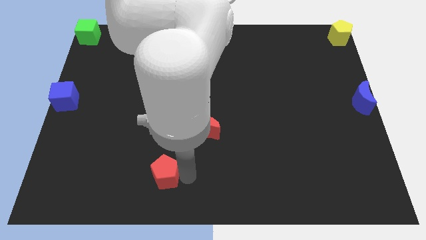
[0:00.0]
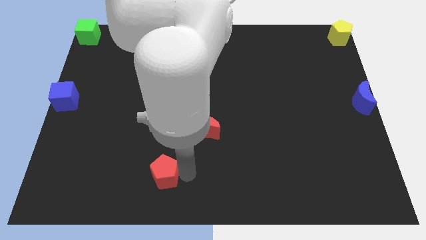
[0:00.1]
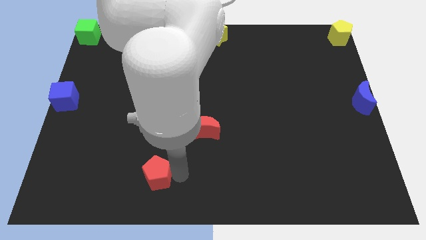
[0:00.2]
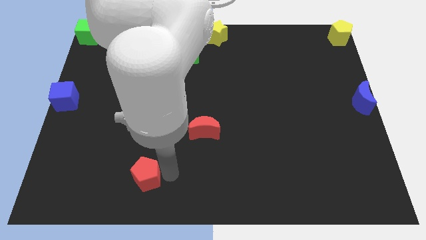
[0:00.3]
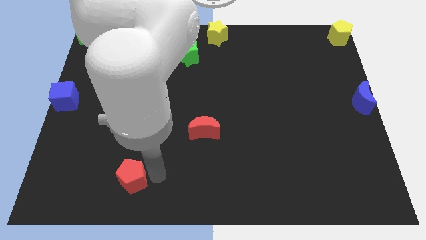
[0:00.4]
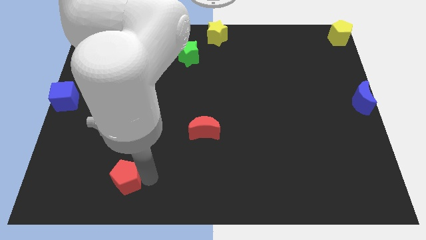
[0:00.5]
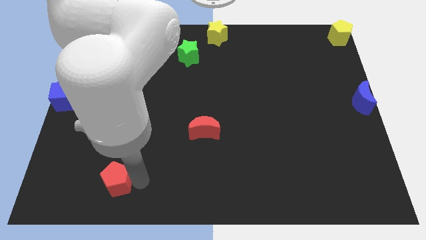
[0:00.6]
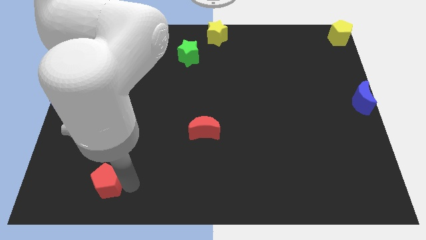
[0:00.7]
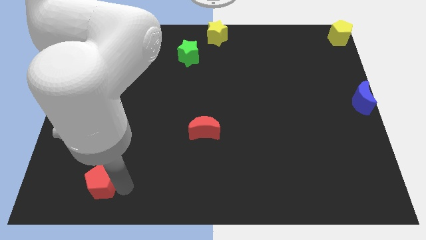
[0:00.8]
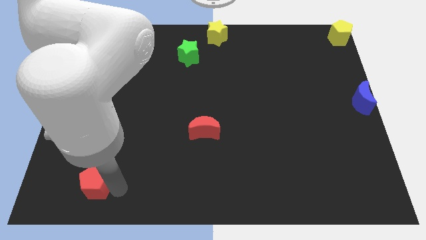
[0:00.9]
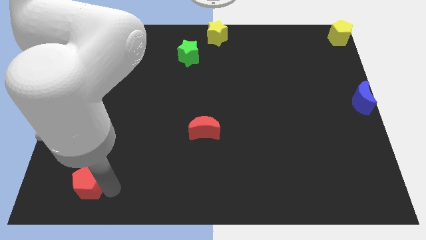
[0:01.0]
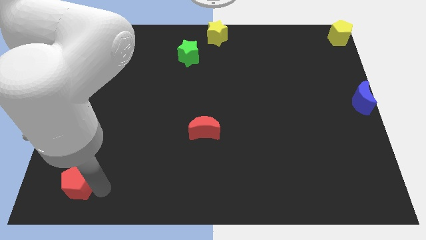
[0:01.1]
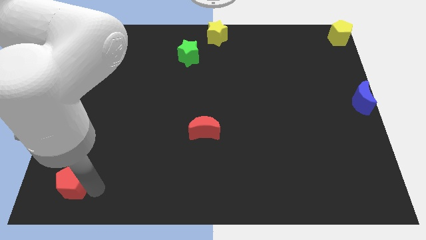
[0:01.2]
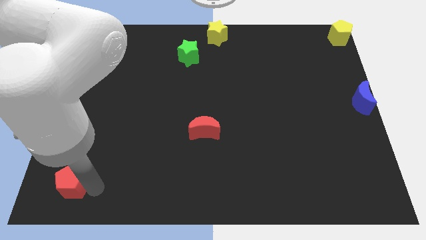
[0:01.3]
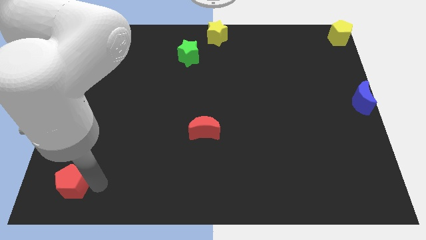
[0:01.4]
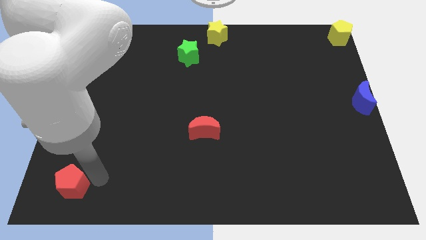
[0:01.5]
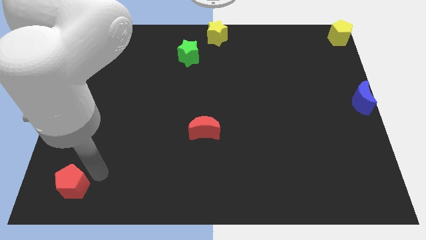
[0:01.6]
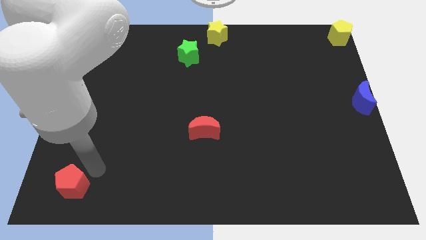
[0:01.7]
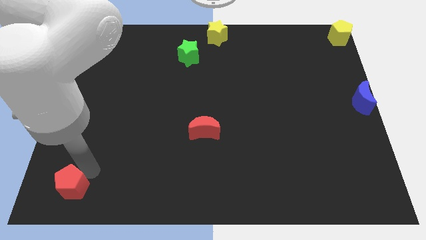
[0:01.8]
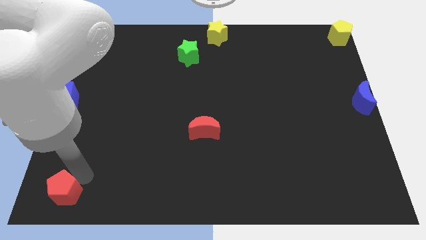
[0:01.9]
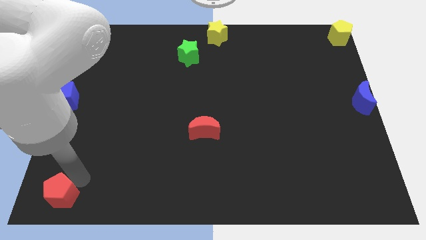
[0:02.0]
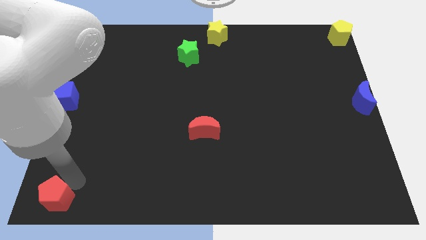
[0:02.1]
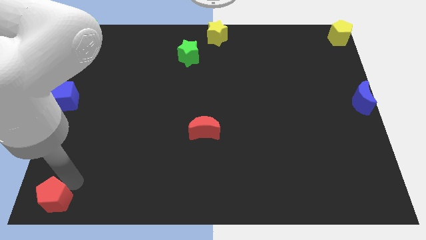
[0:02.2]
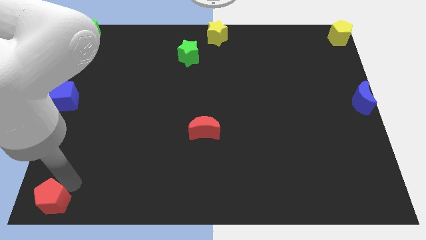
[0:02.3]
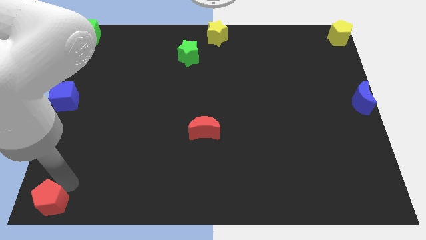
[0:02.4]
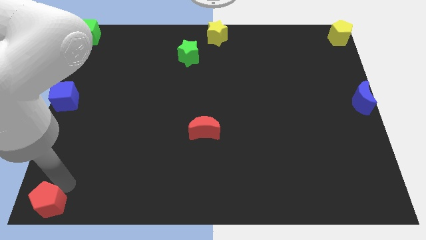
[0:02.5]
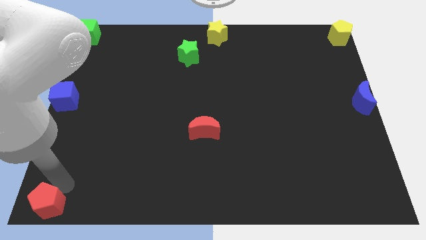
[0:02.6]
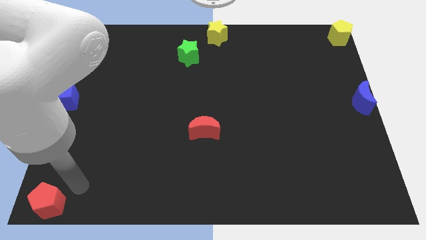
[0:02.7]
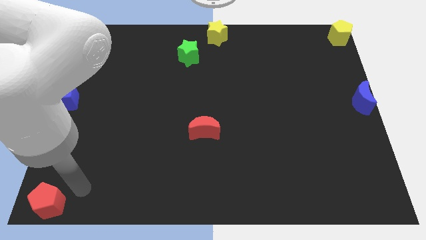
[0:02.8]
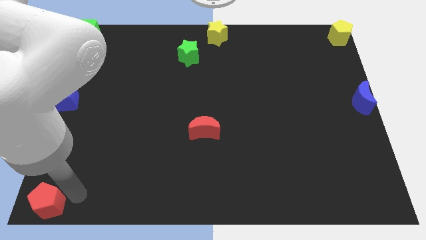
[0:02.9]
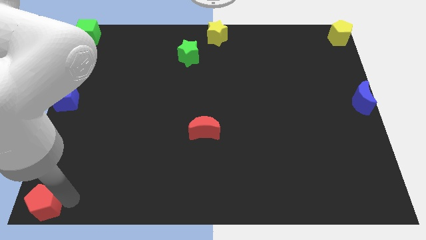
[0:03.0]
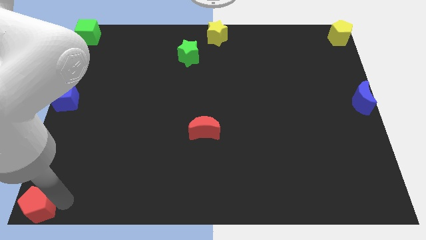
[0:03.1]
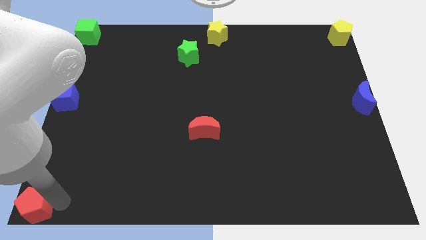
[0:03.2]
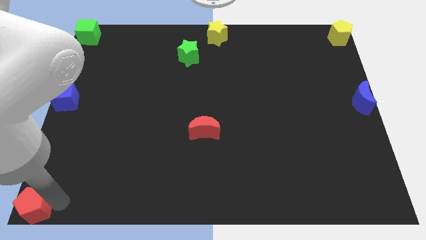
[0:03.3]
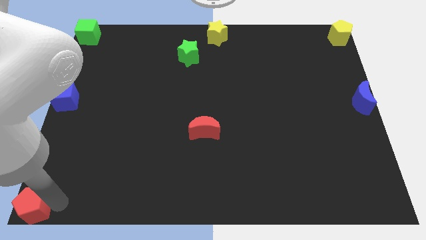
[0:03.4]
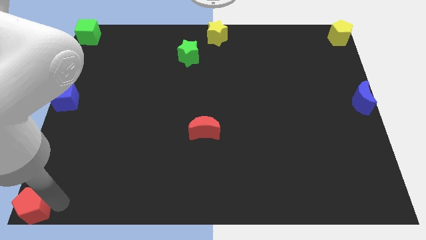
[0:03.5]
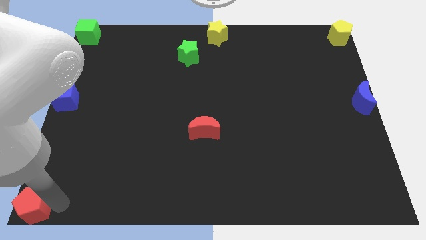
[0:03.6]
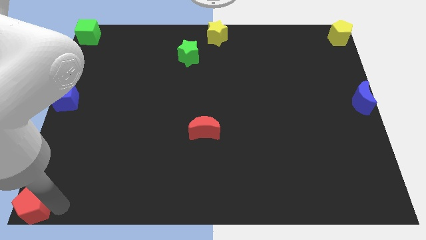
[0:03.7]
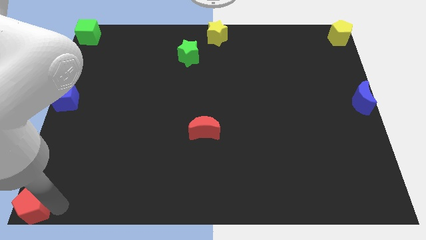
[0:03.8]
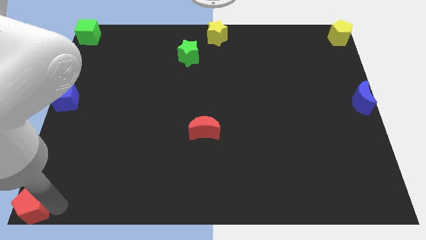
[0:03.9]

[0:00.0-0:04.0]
drag red pentagon towards bottom left side of the board

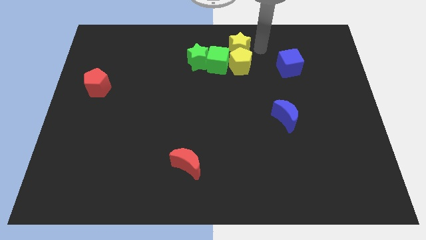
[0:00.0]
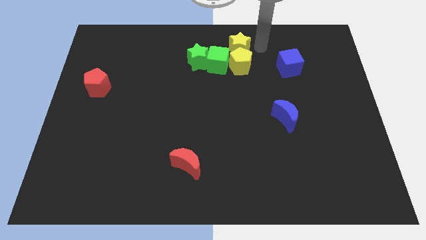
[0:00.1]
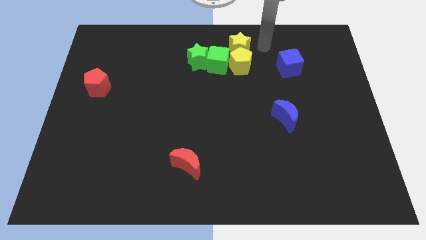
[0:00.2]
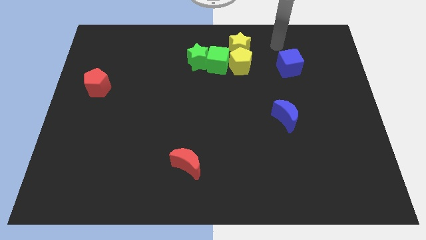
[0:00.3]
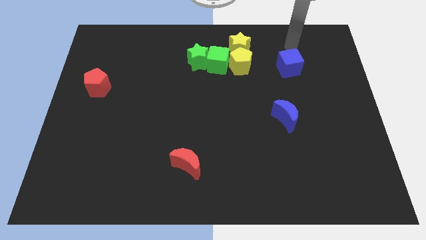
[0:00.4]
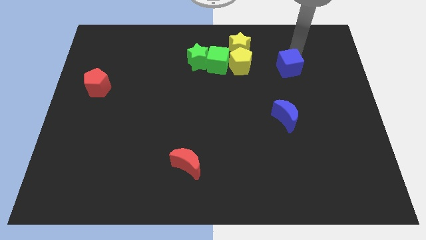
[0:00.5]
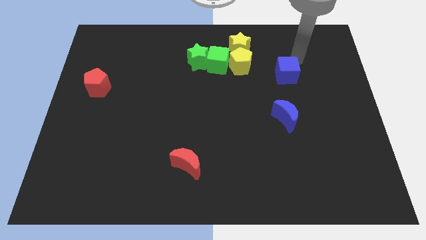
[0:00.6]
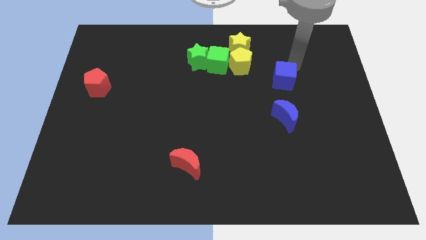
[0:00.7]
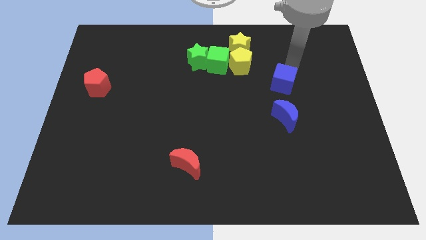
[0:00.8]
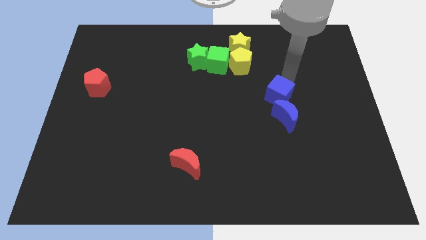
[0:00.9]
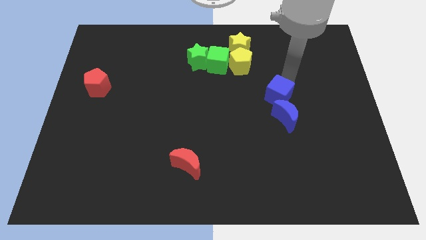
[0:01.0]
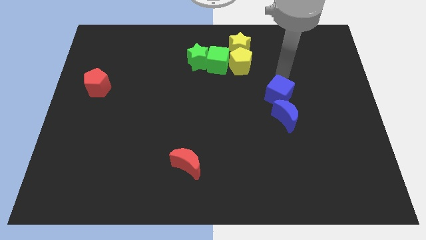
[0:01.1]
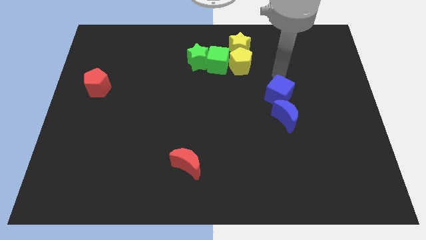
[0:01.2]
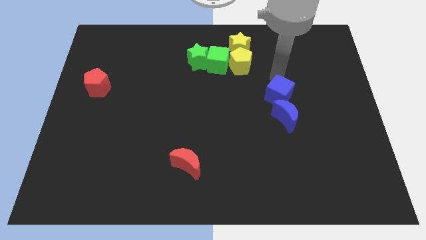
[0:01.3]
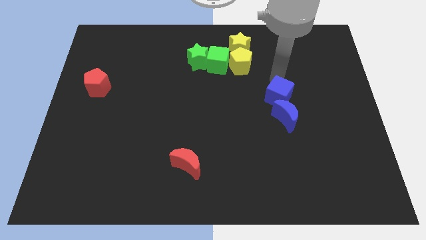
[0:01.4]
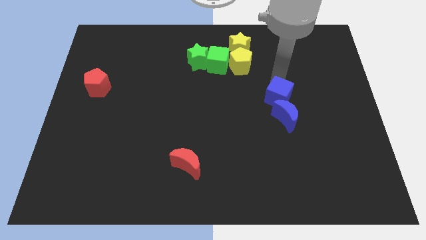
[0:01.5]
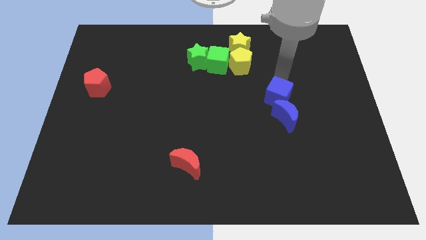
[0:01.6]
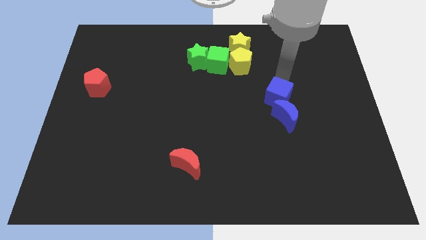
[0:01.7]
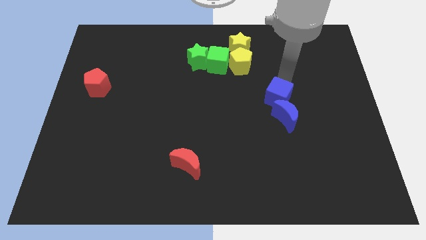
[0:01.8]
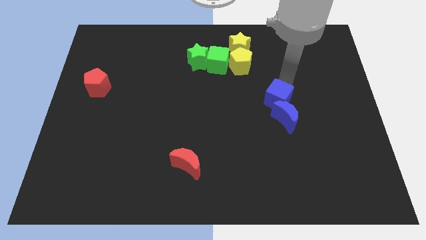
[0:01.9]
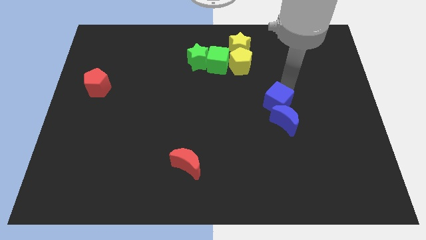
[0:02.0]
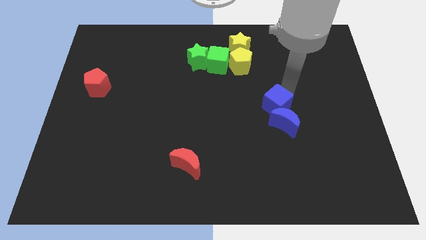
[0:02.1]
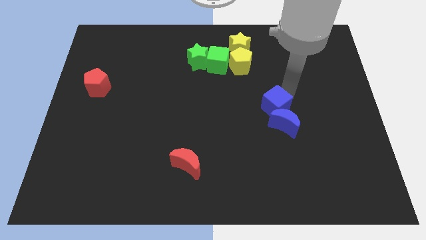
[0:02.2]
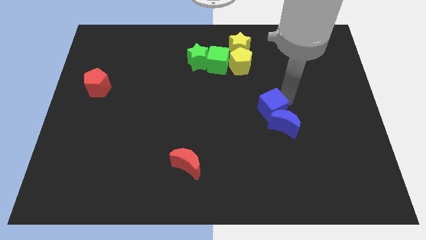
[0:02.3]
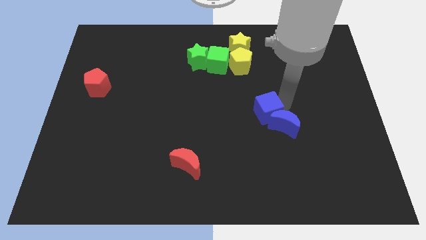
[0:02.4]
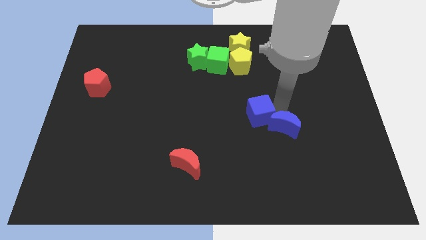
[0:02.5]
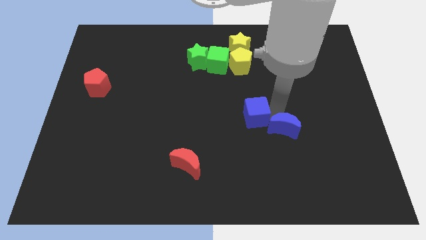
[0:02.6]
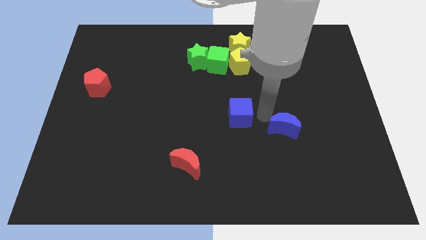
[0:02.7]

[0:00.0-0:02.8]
push the blue blocks towards the bottom side of the board

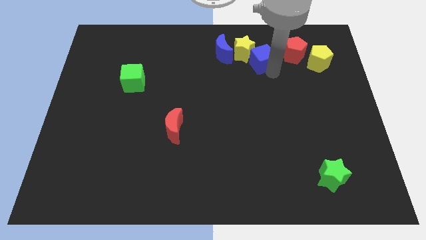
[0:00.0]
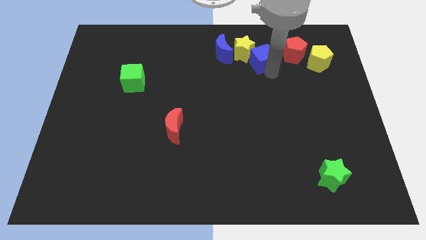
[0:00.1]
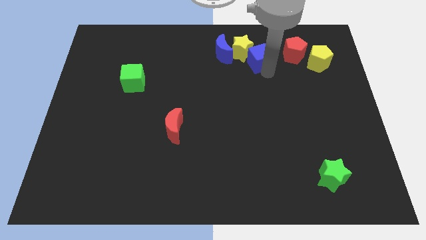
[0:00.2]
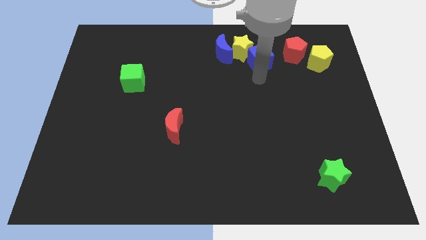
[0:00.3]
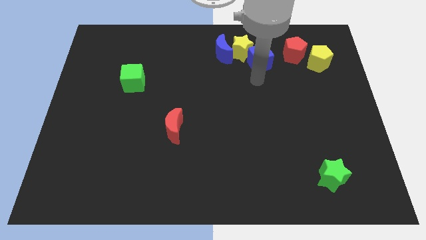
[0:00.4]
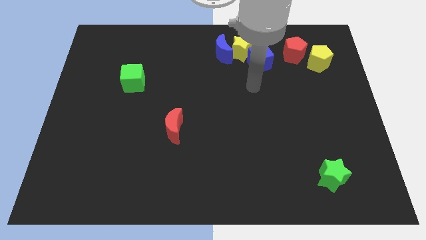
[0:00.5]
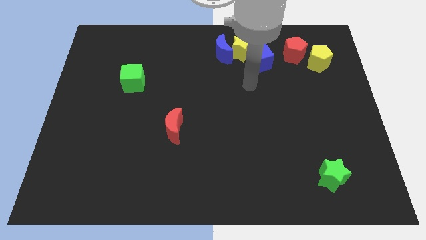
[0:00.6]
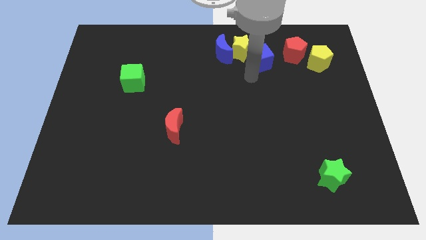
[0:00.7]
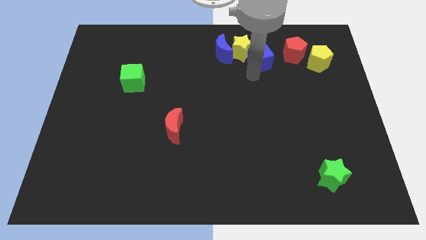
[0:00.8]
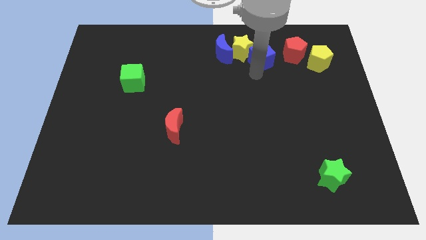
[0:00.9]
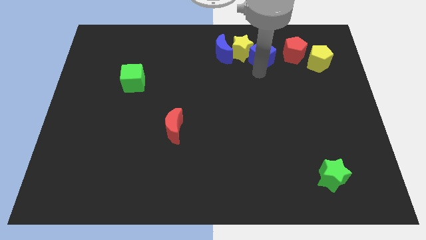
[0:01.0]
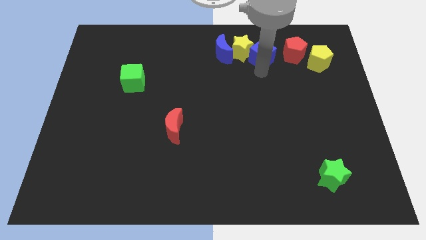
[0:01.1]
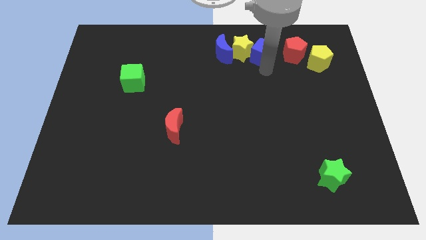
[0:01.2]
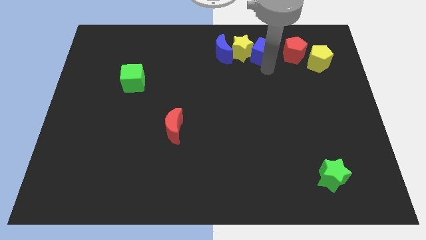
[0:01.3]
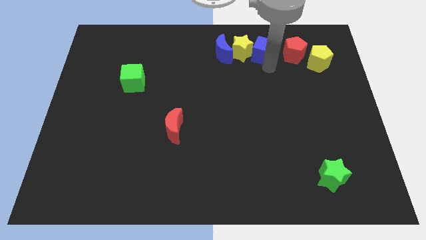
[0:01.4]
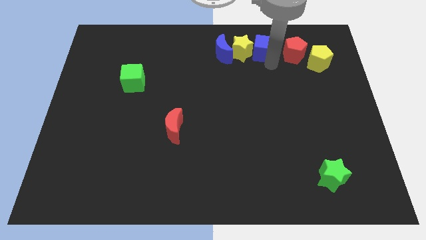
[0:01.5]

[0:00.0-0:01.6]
slightly push the blue cube towards the top

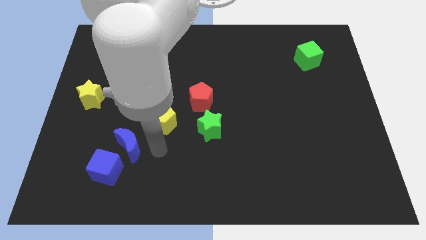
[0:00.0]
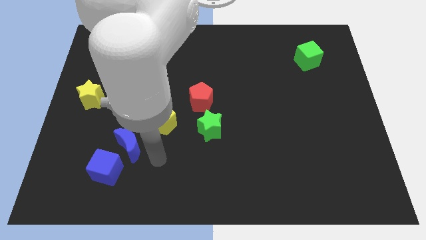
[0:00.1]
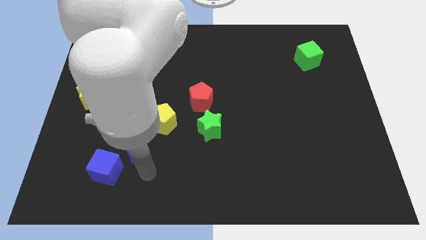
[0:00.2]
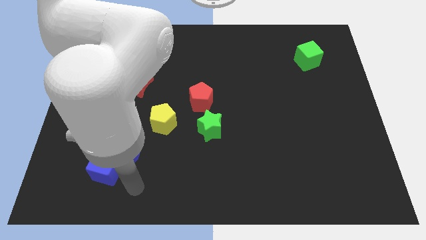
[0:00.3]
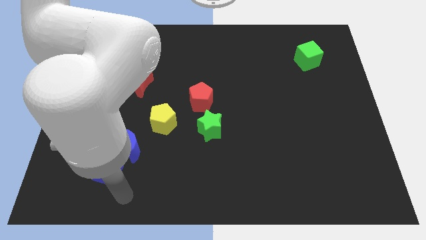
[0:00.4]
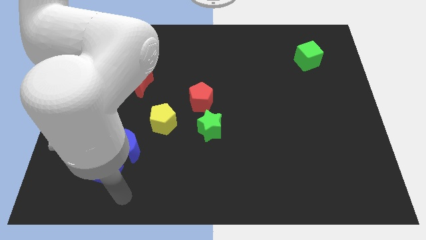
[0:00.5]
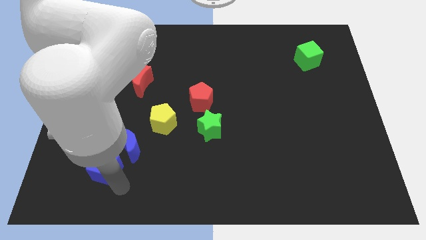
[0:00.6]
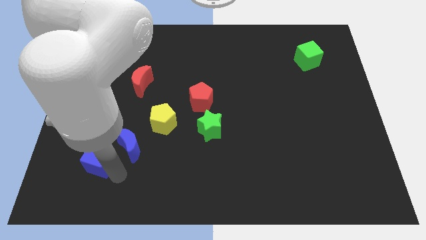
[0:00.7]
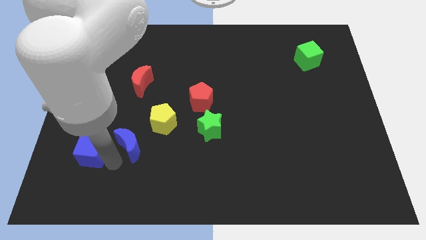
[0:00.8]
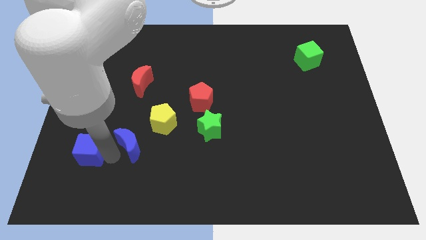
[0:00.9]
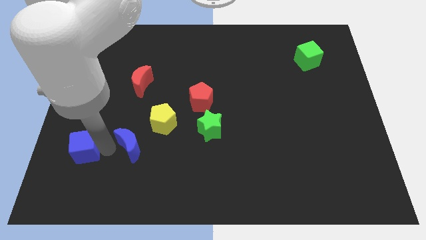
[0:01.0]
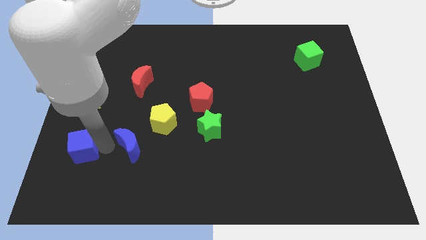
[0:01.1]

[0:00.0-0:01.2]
move blue cube up to the left of blue crescent
